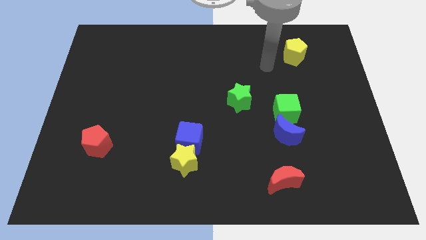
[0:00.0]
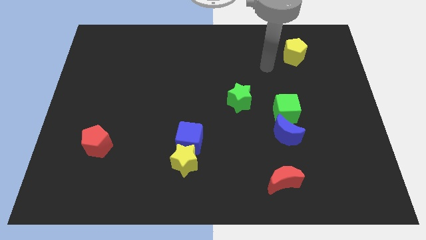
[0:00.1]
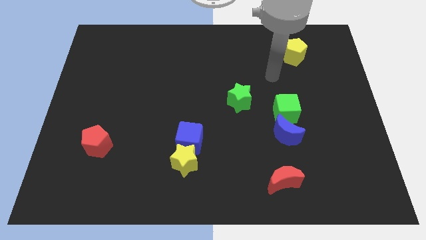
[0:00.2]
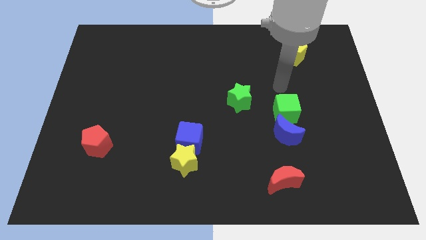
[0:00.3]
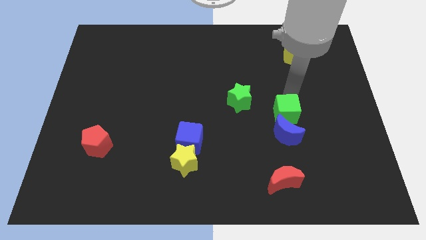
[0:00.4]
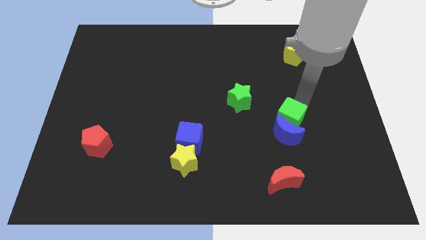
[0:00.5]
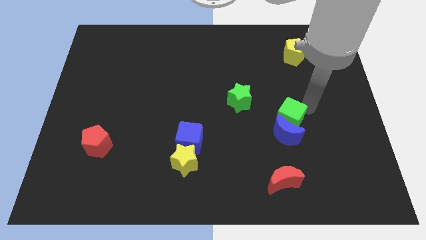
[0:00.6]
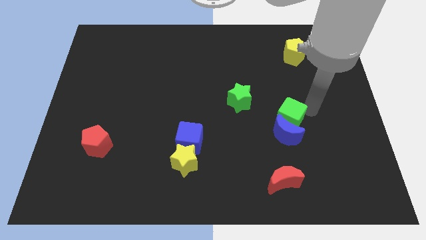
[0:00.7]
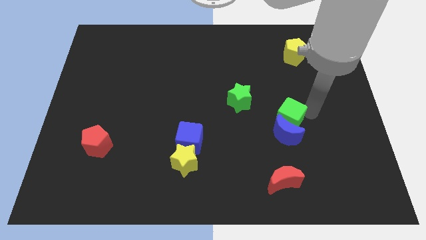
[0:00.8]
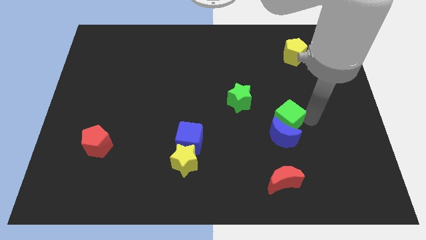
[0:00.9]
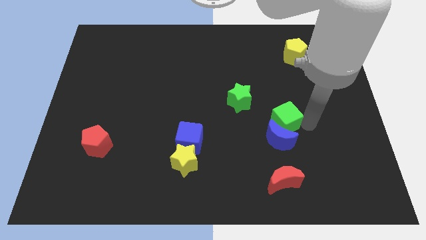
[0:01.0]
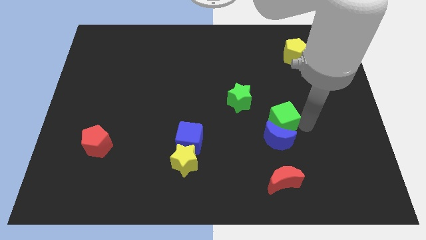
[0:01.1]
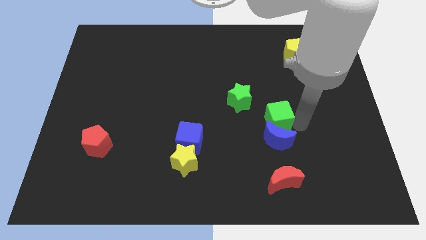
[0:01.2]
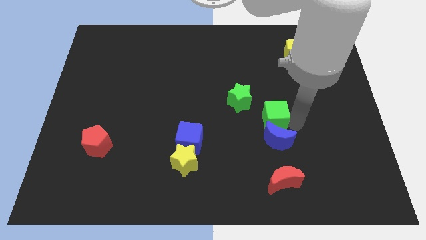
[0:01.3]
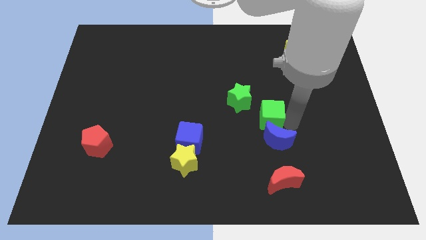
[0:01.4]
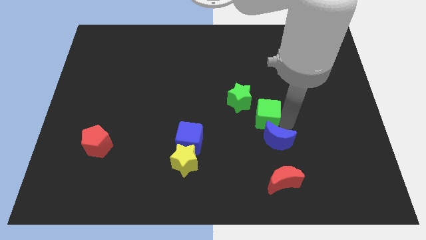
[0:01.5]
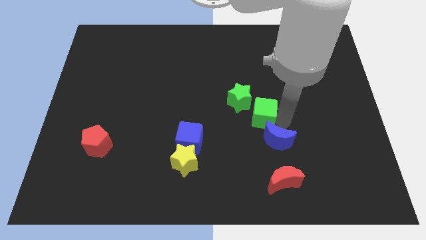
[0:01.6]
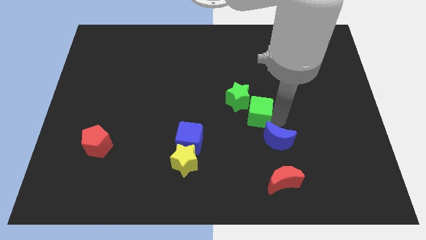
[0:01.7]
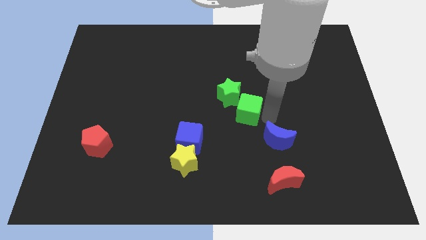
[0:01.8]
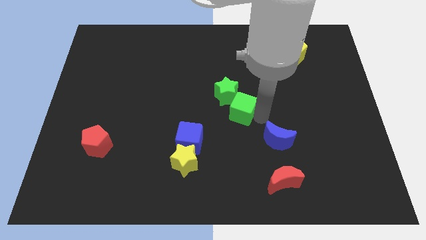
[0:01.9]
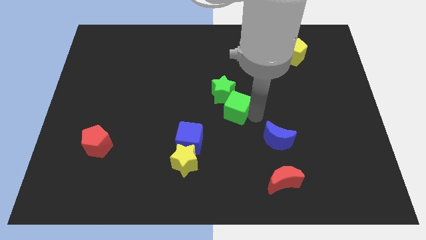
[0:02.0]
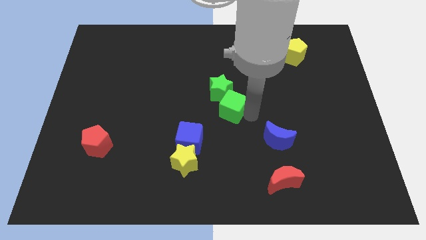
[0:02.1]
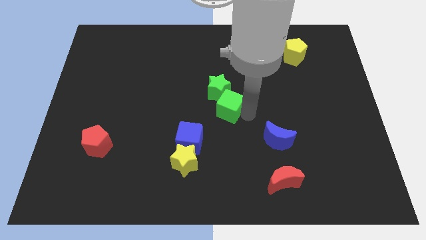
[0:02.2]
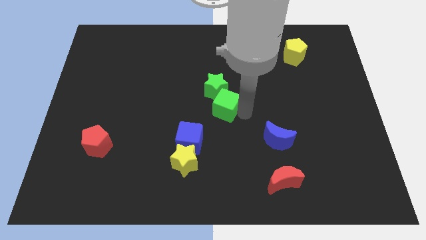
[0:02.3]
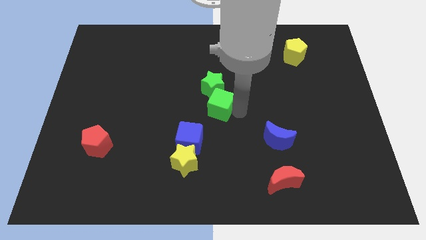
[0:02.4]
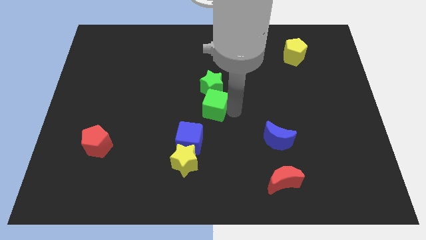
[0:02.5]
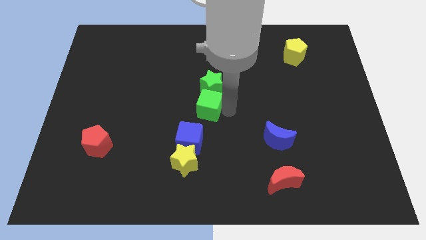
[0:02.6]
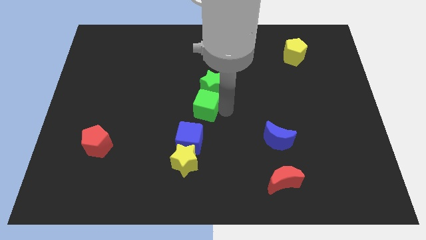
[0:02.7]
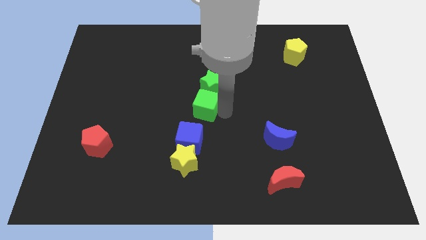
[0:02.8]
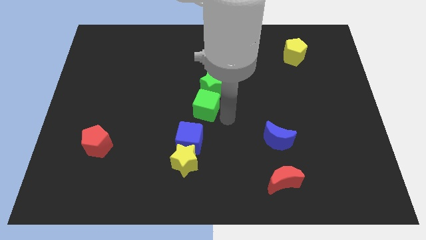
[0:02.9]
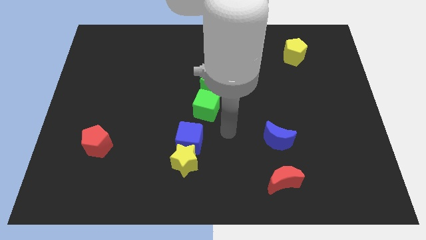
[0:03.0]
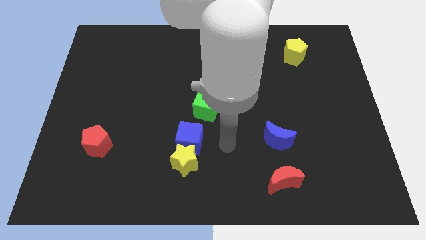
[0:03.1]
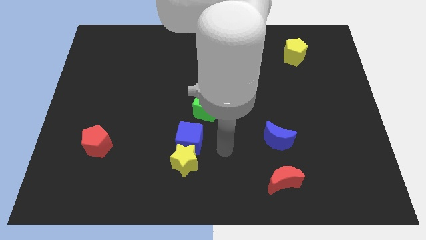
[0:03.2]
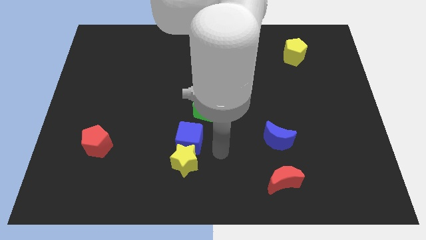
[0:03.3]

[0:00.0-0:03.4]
push the green blocks to the top side of the blue cube

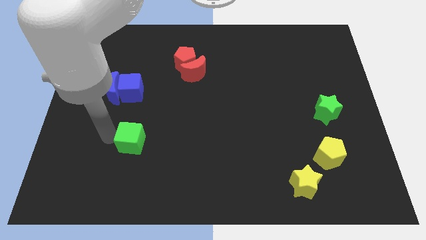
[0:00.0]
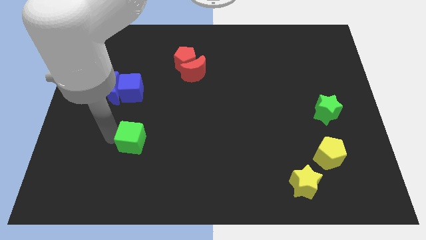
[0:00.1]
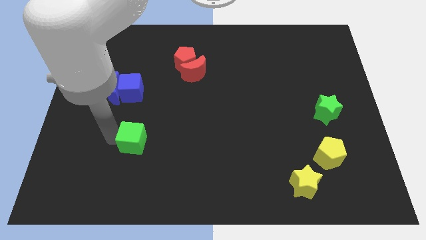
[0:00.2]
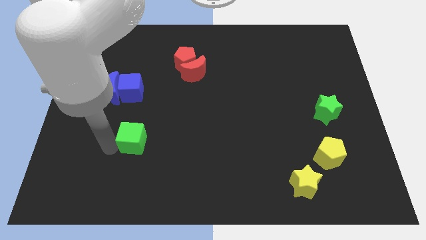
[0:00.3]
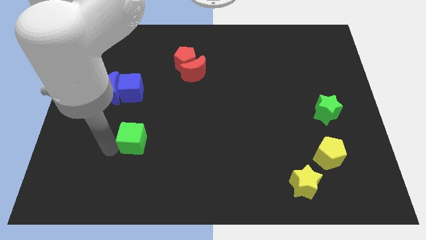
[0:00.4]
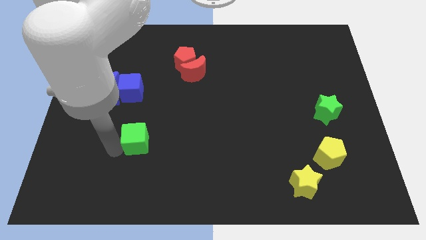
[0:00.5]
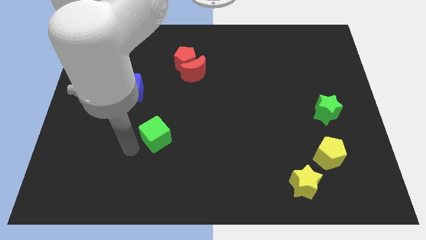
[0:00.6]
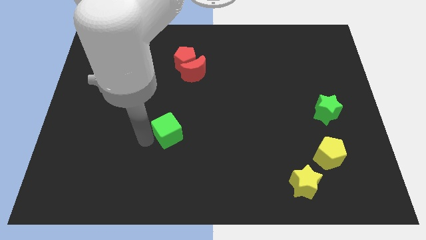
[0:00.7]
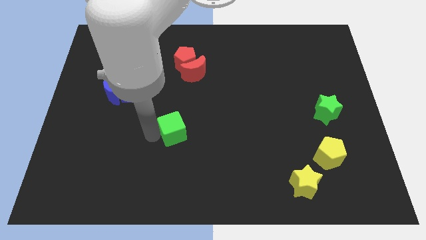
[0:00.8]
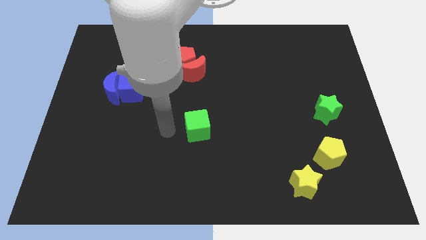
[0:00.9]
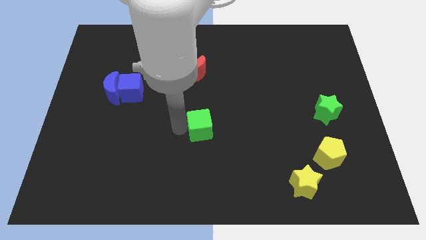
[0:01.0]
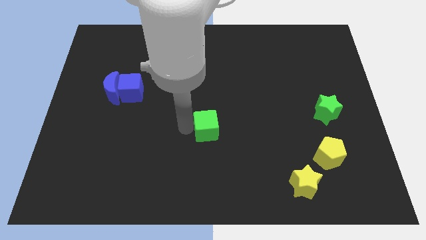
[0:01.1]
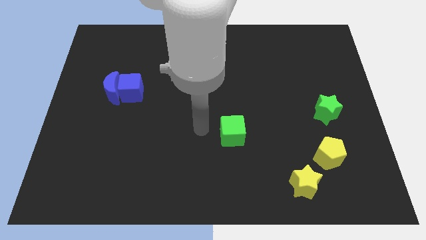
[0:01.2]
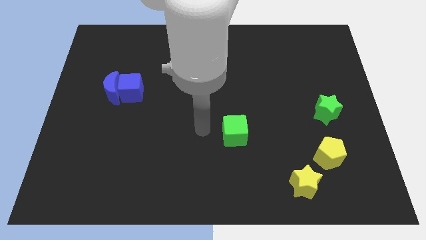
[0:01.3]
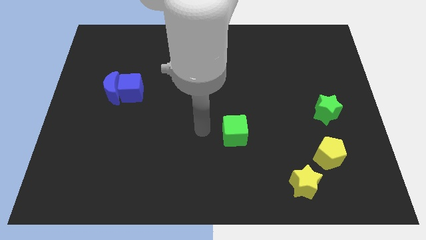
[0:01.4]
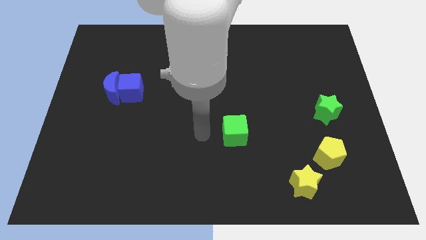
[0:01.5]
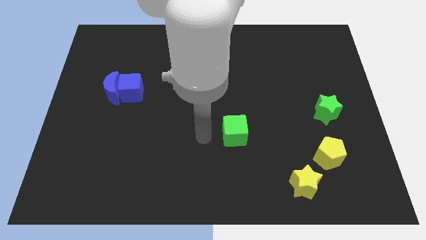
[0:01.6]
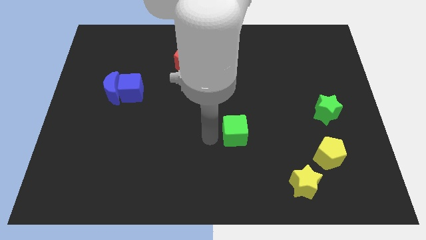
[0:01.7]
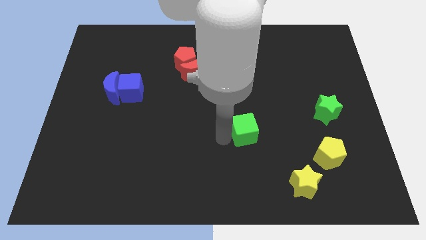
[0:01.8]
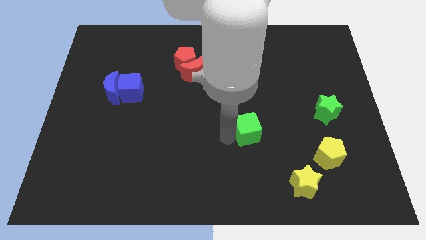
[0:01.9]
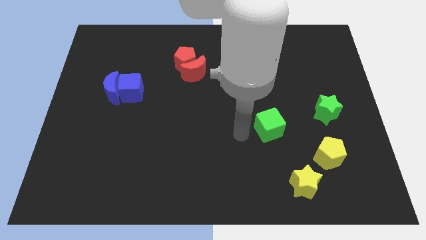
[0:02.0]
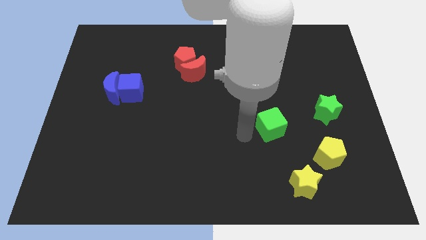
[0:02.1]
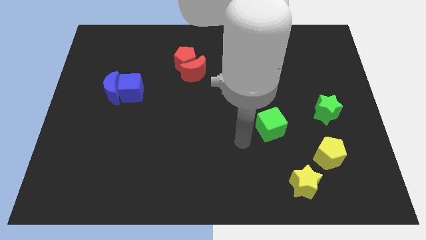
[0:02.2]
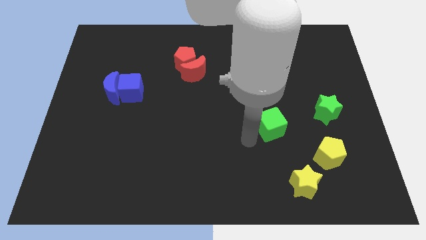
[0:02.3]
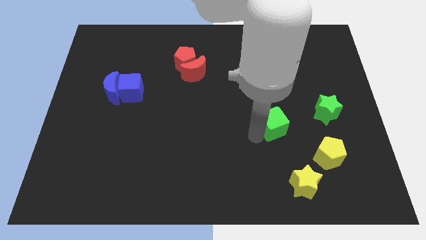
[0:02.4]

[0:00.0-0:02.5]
move green cube towards green star

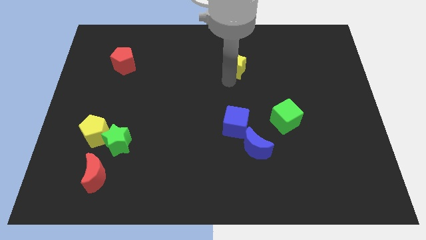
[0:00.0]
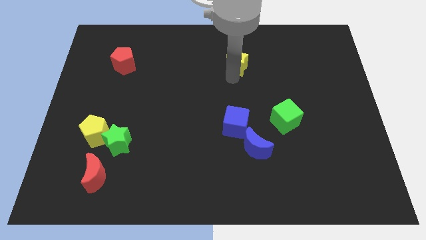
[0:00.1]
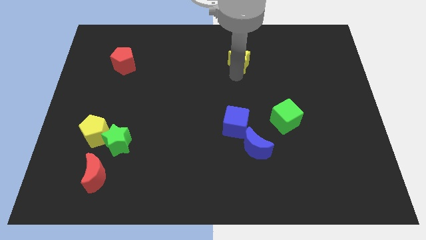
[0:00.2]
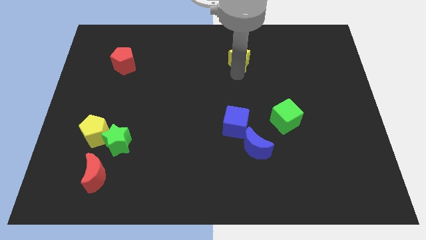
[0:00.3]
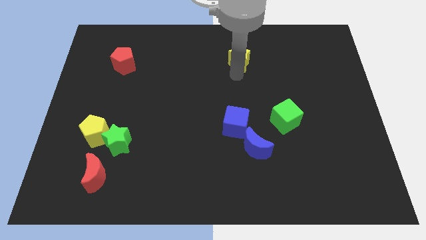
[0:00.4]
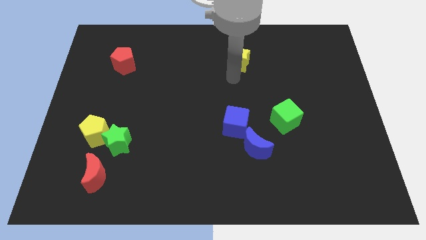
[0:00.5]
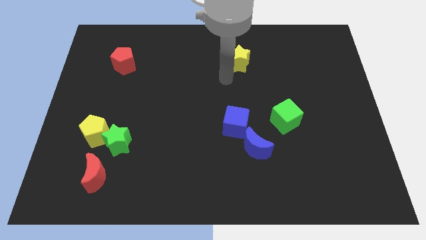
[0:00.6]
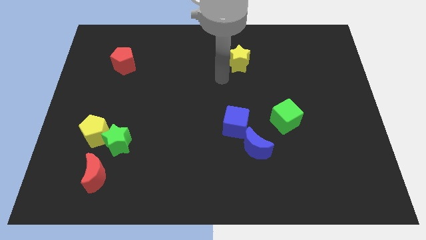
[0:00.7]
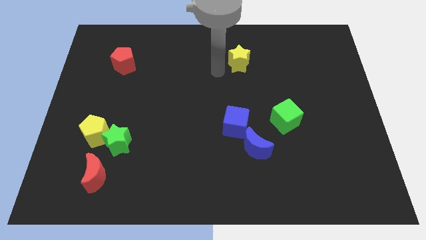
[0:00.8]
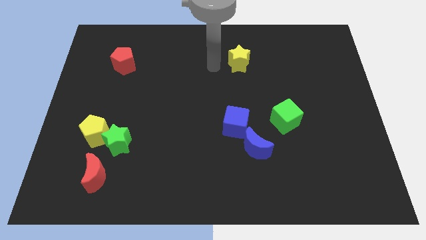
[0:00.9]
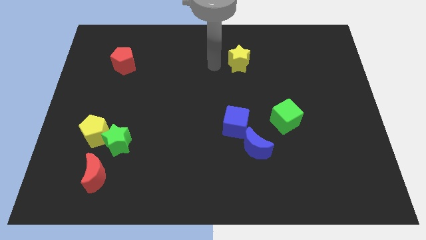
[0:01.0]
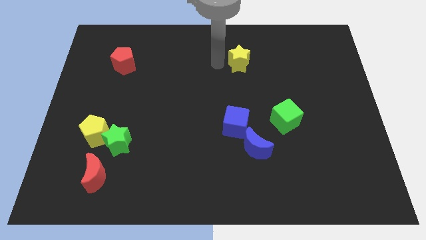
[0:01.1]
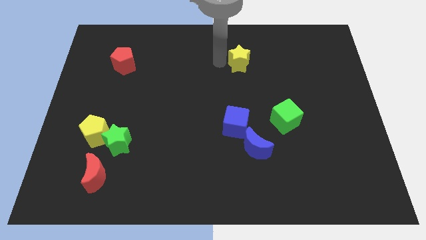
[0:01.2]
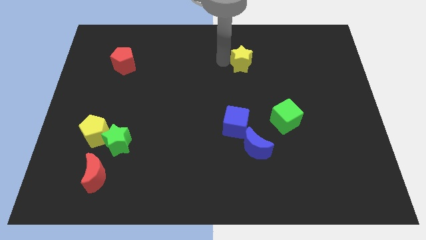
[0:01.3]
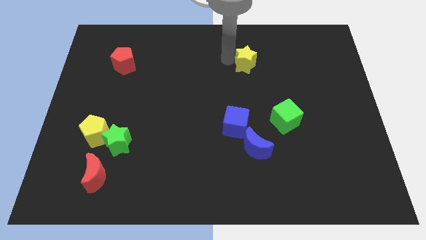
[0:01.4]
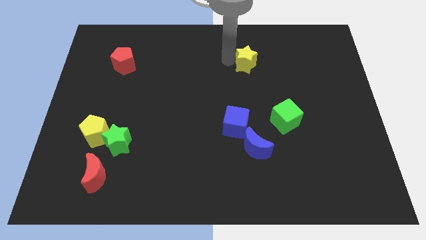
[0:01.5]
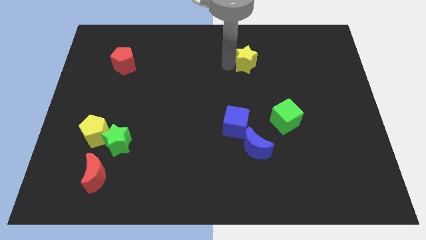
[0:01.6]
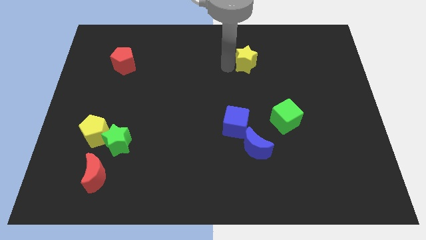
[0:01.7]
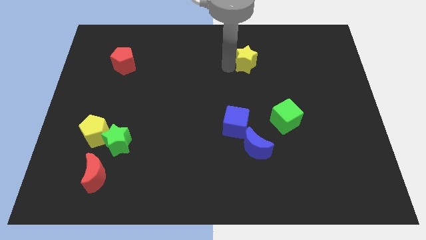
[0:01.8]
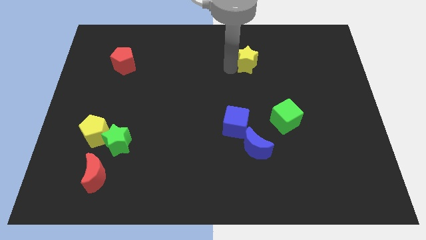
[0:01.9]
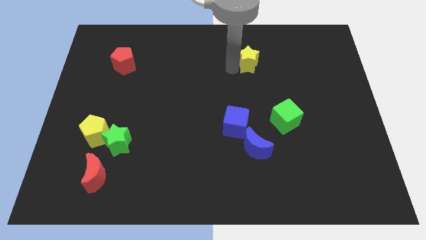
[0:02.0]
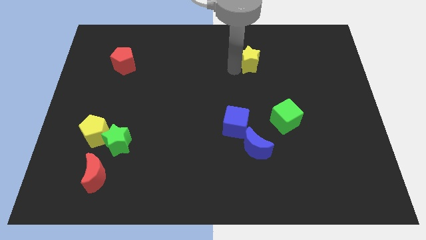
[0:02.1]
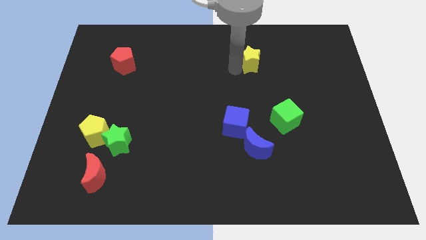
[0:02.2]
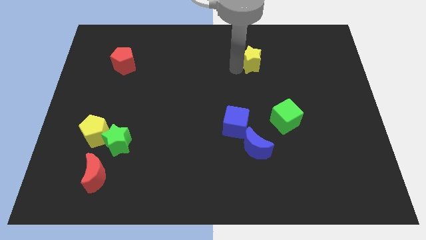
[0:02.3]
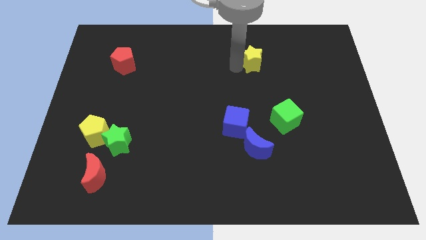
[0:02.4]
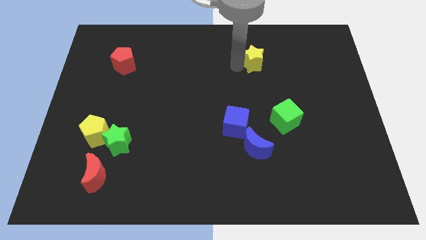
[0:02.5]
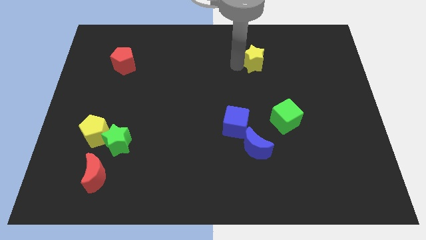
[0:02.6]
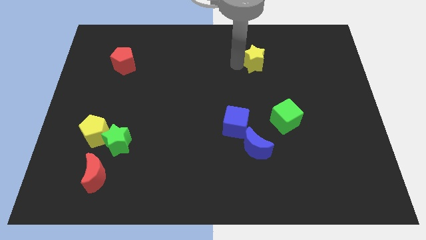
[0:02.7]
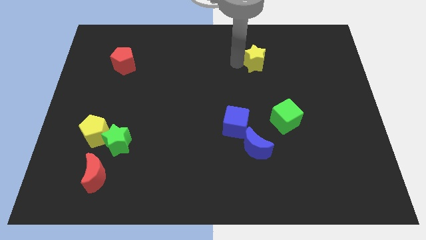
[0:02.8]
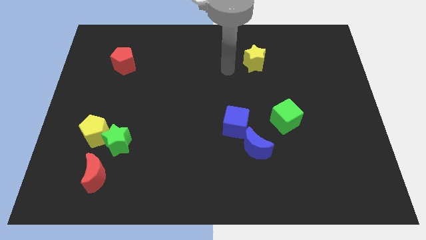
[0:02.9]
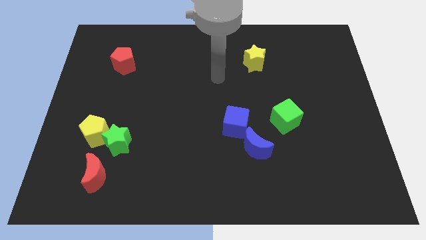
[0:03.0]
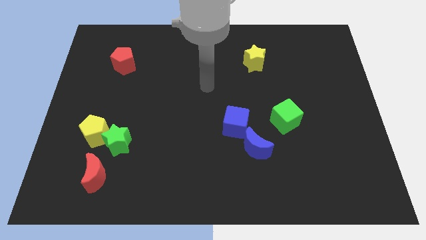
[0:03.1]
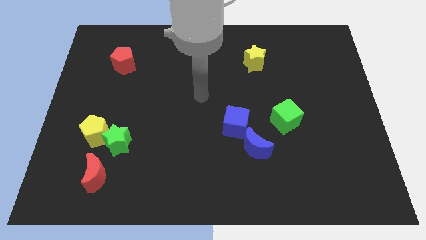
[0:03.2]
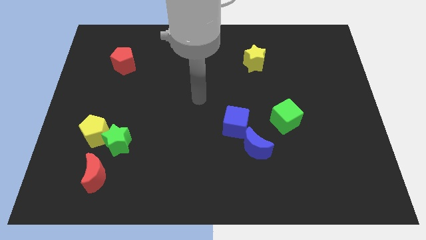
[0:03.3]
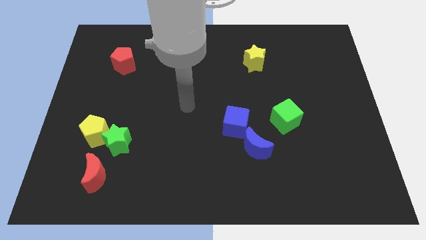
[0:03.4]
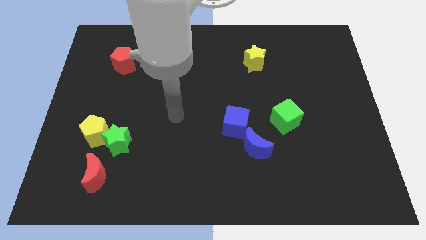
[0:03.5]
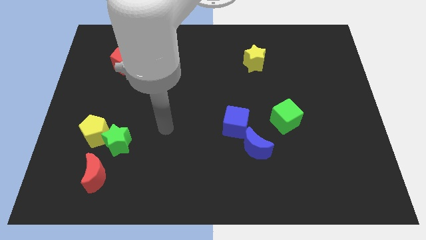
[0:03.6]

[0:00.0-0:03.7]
make a triangle with the help of blue cube green cube and yellow star
